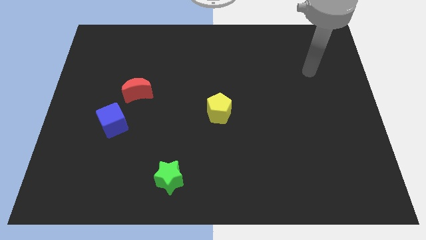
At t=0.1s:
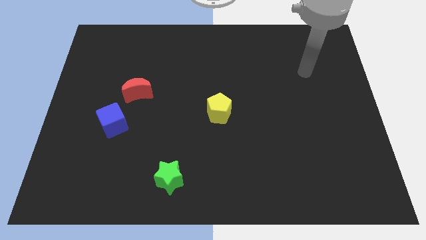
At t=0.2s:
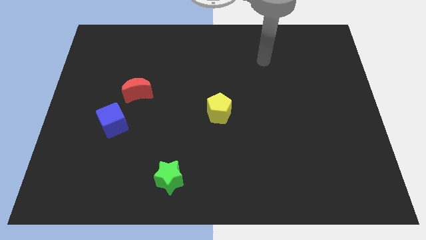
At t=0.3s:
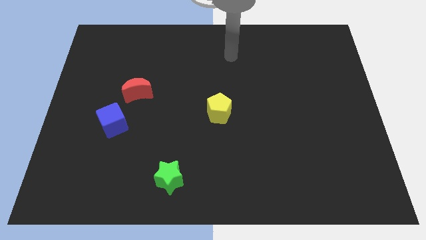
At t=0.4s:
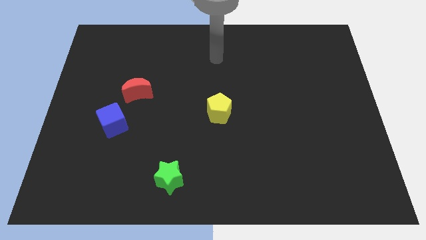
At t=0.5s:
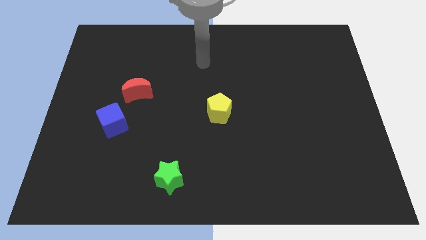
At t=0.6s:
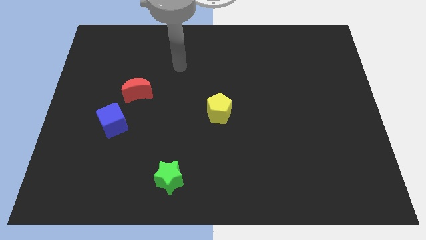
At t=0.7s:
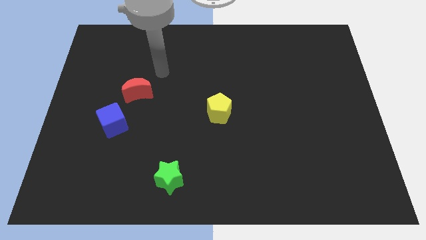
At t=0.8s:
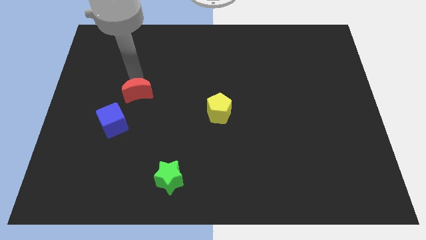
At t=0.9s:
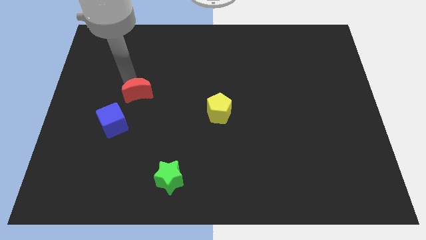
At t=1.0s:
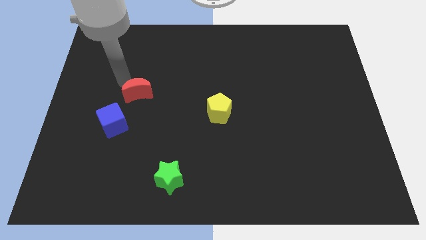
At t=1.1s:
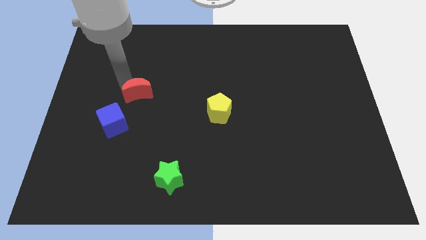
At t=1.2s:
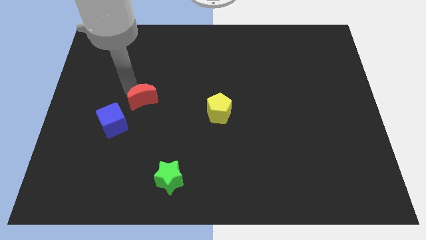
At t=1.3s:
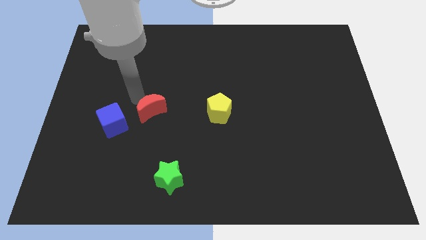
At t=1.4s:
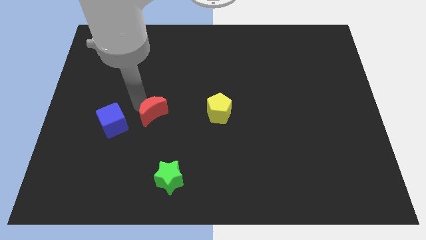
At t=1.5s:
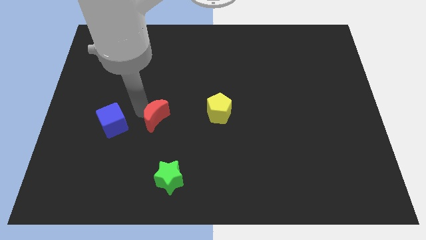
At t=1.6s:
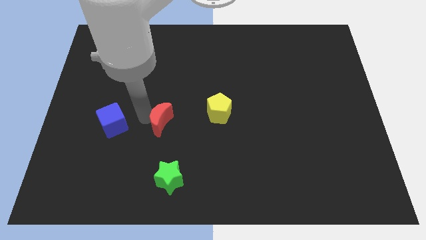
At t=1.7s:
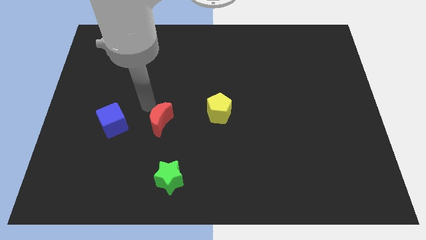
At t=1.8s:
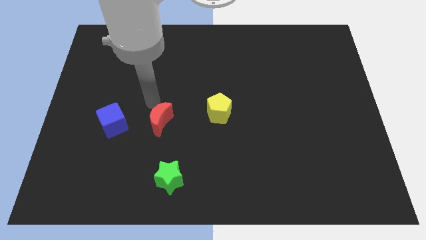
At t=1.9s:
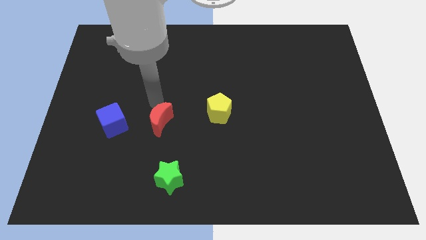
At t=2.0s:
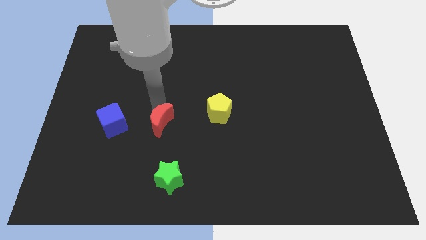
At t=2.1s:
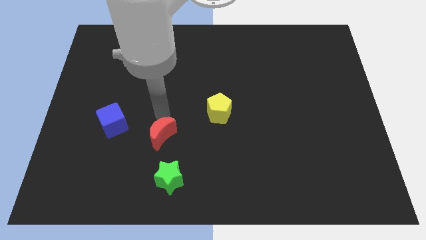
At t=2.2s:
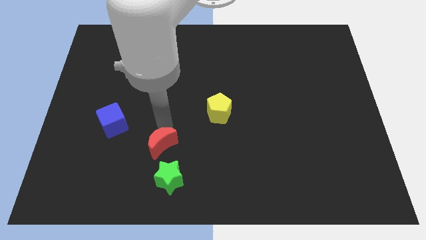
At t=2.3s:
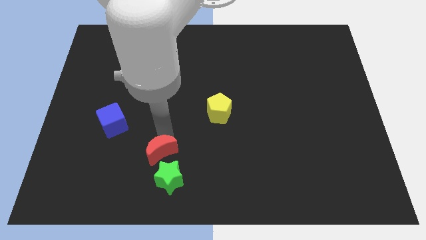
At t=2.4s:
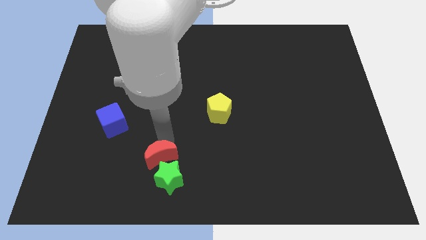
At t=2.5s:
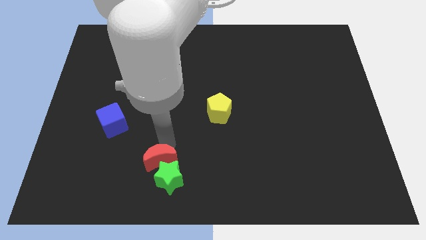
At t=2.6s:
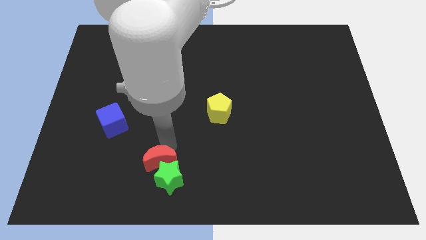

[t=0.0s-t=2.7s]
push the red moon to the star

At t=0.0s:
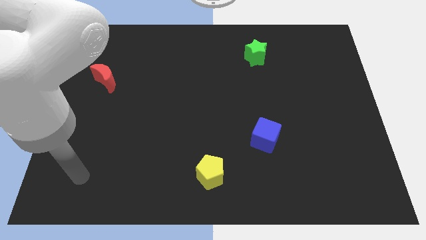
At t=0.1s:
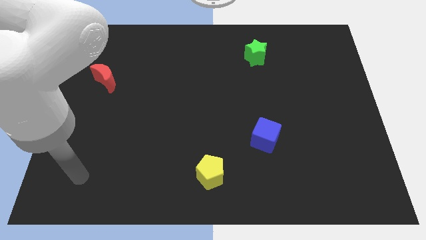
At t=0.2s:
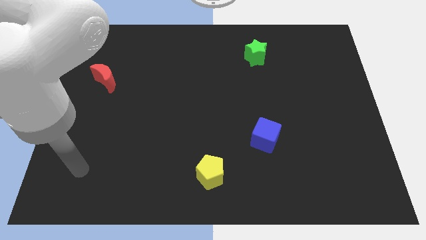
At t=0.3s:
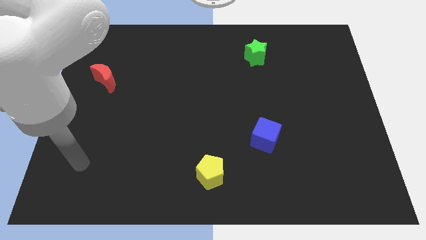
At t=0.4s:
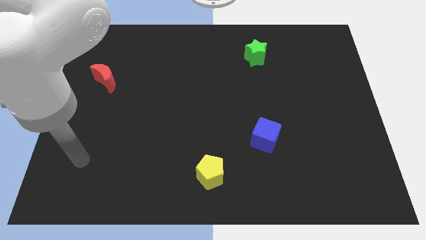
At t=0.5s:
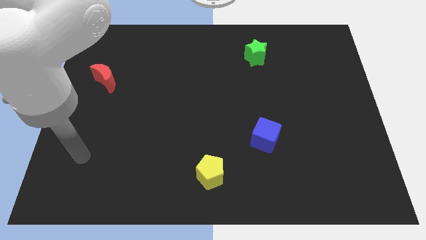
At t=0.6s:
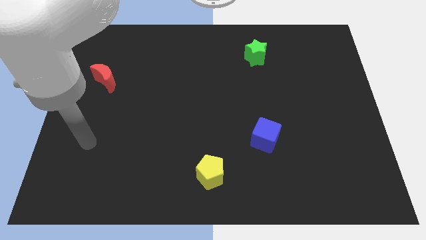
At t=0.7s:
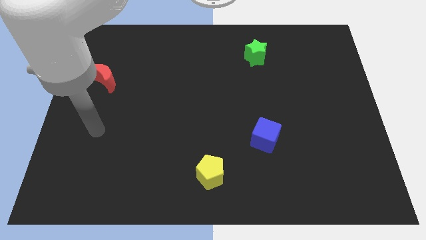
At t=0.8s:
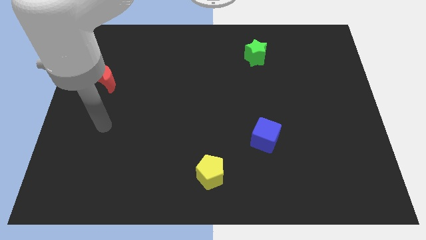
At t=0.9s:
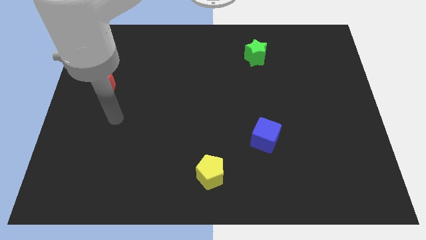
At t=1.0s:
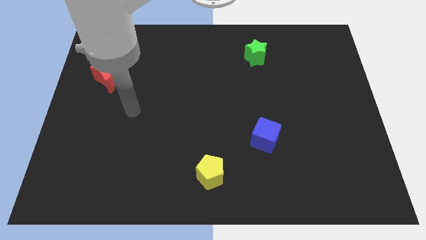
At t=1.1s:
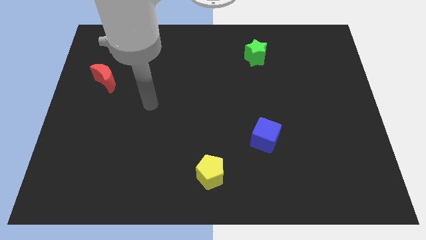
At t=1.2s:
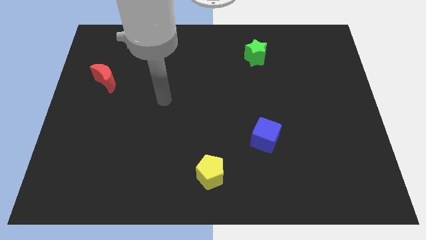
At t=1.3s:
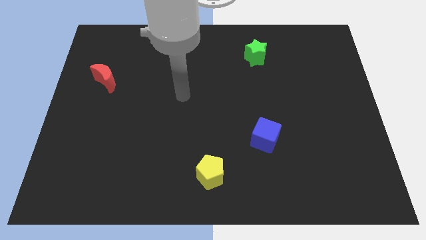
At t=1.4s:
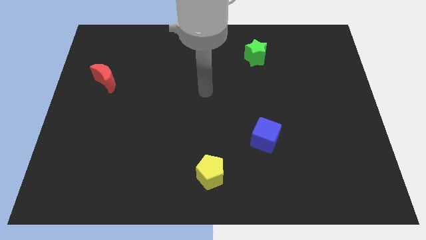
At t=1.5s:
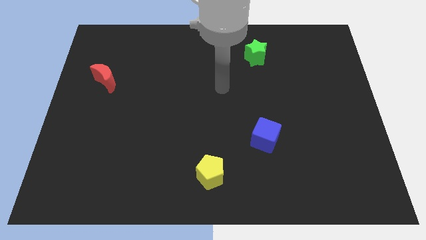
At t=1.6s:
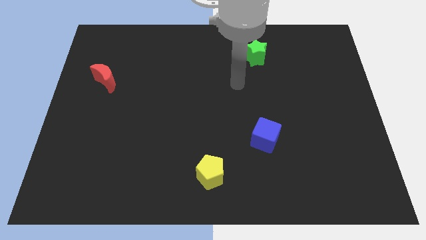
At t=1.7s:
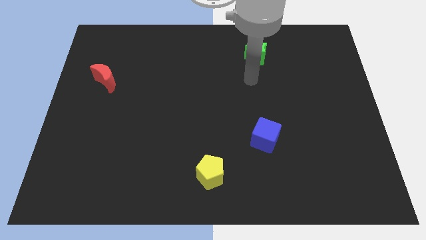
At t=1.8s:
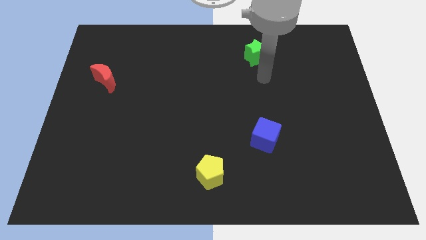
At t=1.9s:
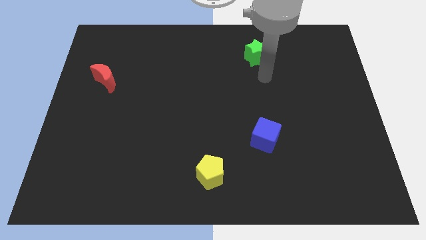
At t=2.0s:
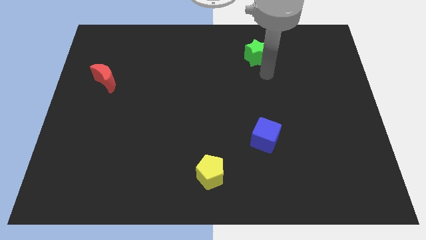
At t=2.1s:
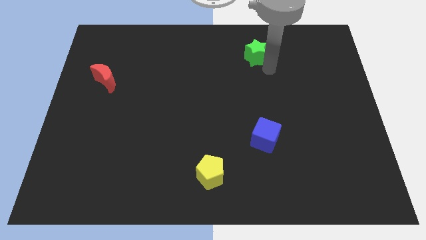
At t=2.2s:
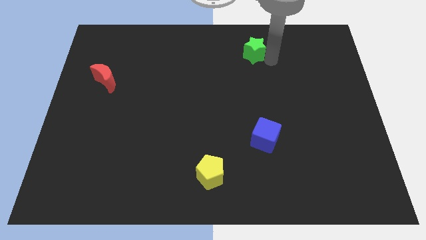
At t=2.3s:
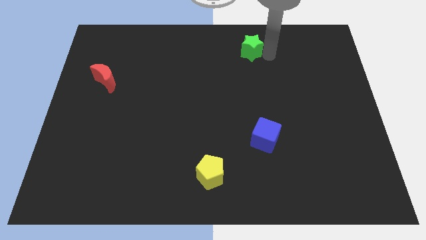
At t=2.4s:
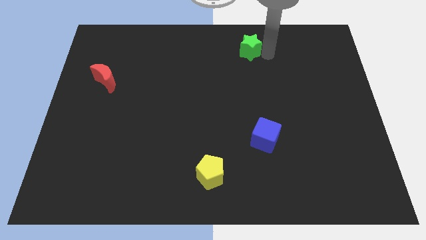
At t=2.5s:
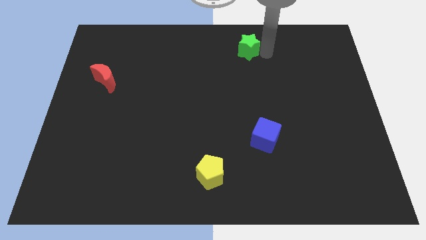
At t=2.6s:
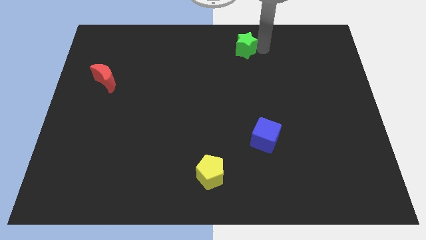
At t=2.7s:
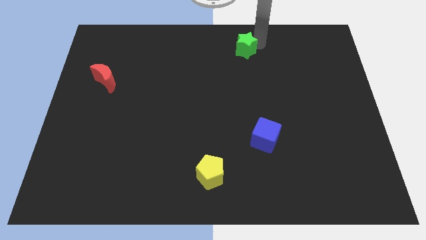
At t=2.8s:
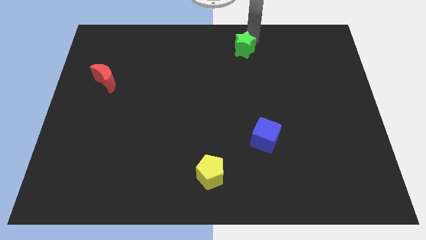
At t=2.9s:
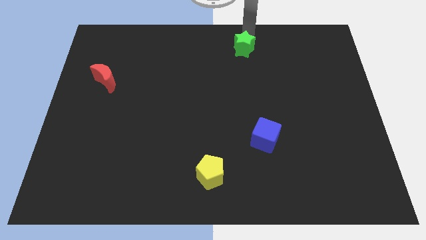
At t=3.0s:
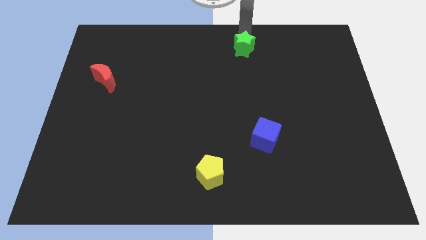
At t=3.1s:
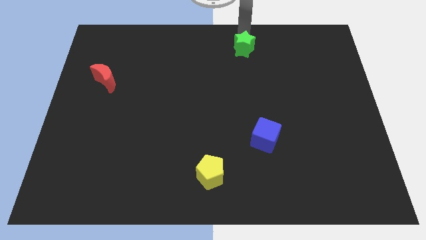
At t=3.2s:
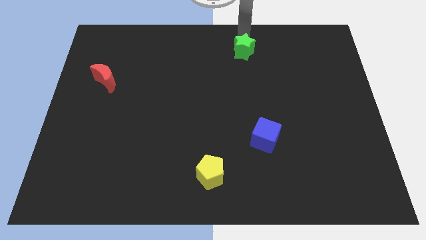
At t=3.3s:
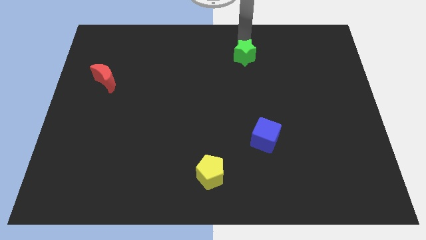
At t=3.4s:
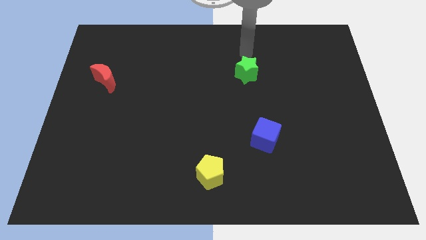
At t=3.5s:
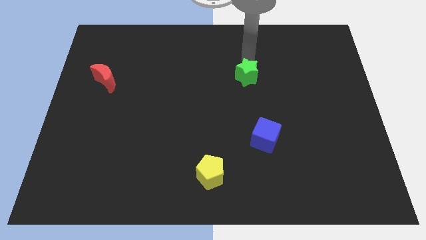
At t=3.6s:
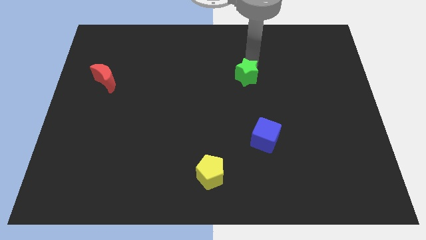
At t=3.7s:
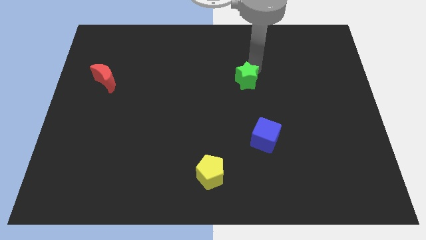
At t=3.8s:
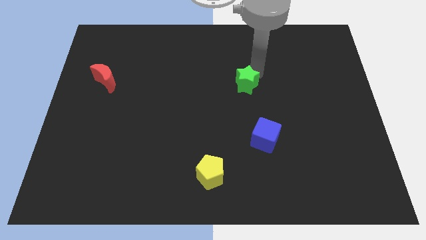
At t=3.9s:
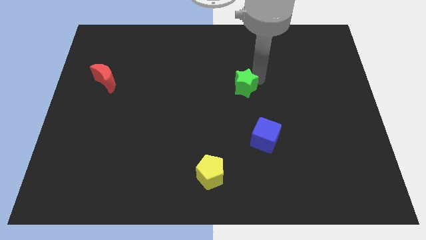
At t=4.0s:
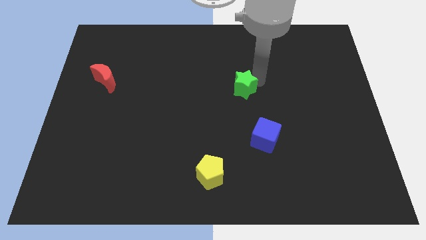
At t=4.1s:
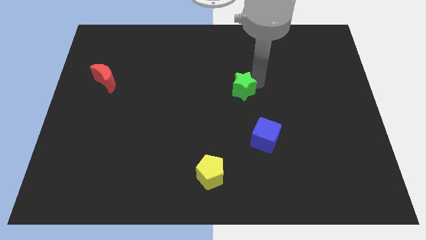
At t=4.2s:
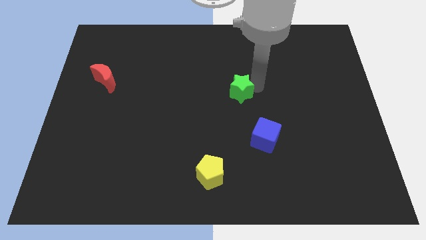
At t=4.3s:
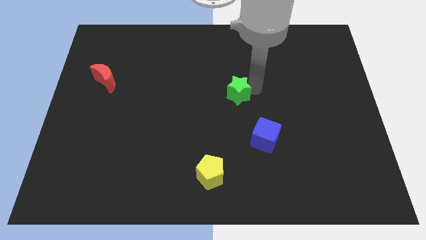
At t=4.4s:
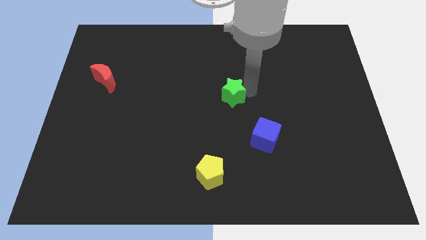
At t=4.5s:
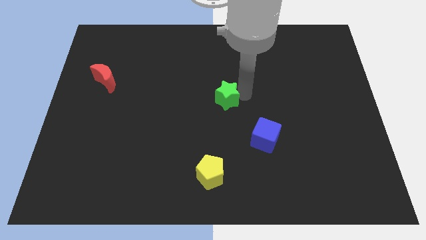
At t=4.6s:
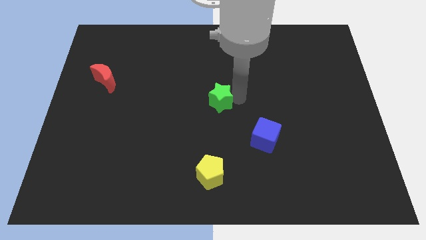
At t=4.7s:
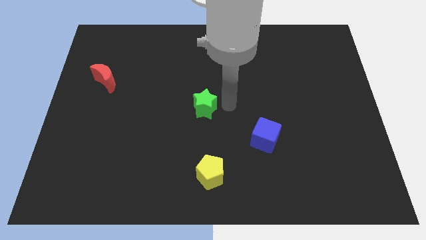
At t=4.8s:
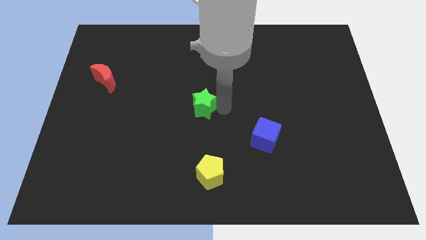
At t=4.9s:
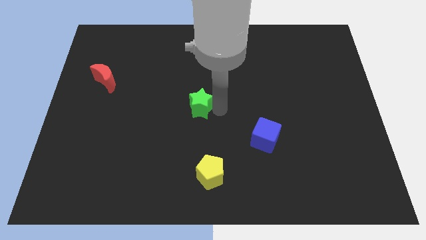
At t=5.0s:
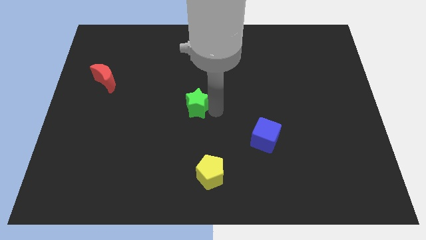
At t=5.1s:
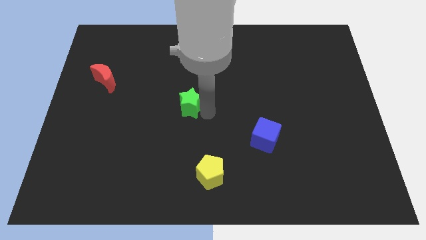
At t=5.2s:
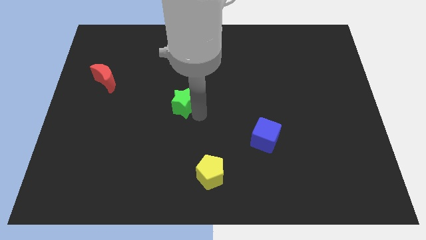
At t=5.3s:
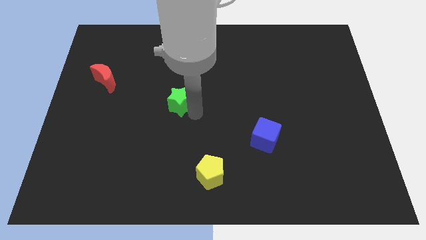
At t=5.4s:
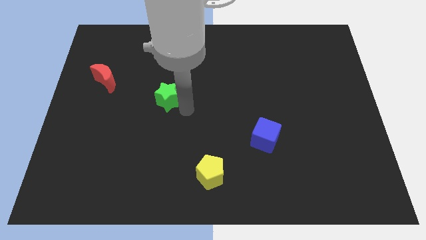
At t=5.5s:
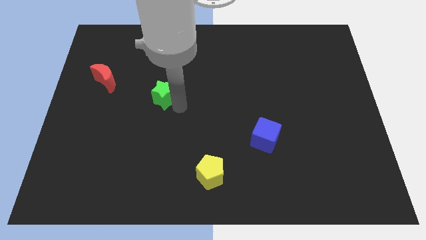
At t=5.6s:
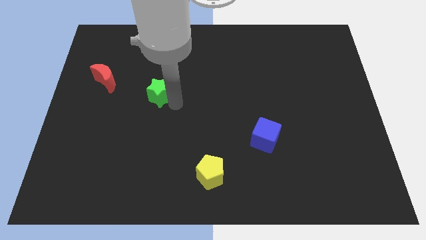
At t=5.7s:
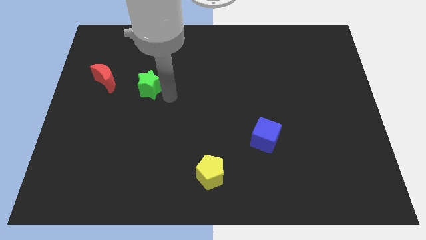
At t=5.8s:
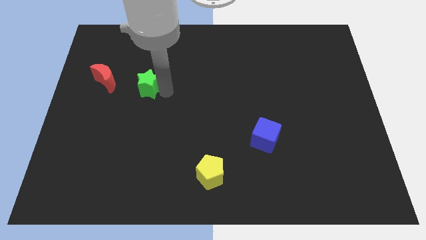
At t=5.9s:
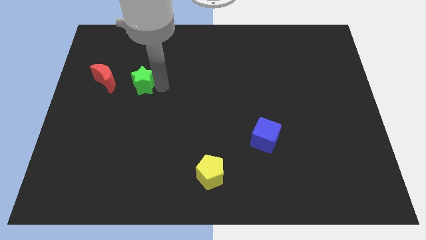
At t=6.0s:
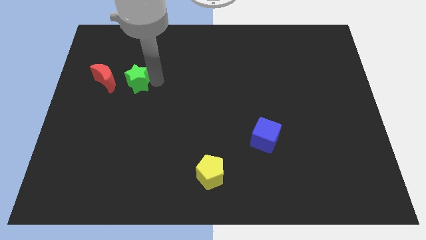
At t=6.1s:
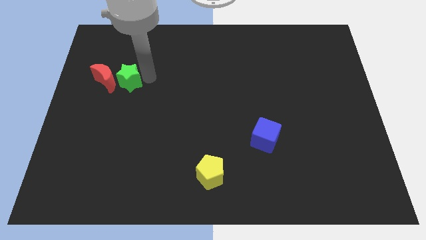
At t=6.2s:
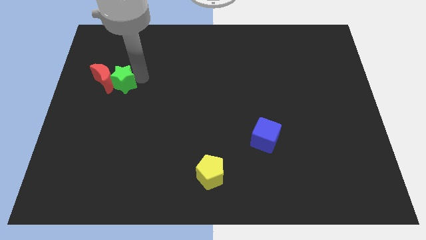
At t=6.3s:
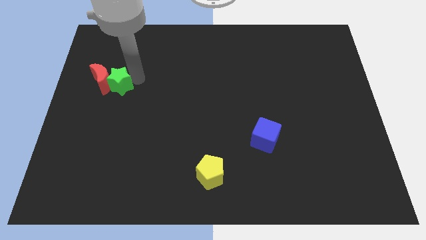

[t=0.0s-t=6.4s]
put the green block to the moon
